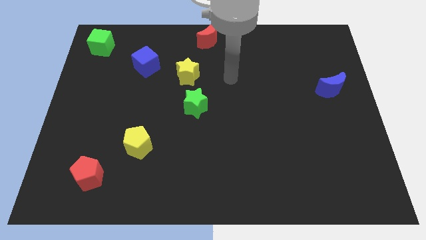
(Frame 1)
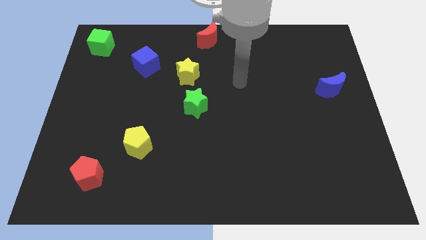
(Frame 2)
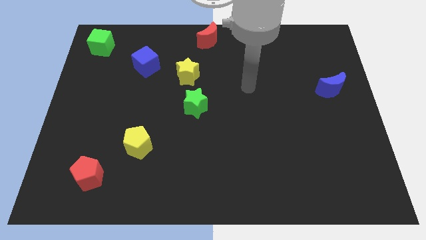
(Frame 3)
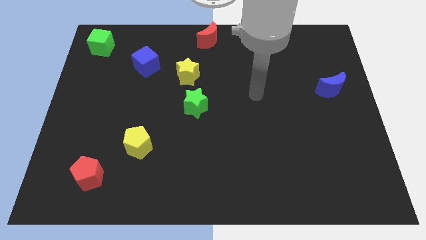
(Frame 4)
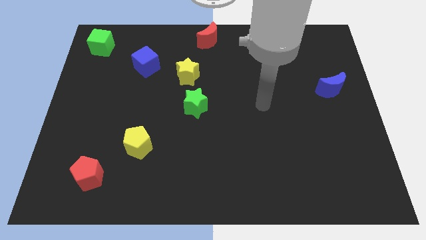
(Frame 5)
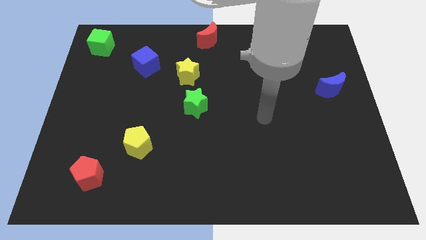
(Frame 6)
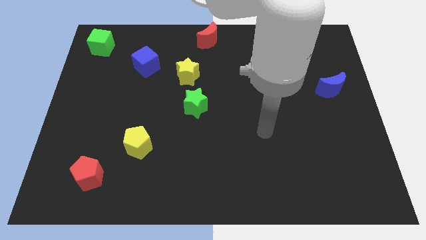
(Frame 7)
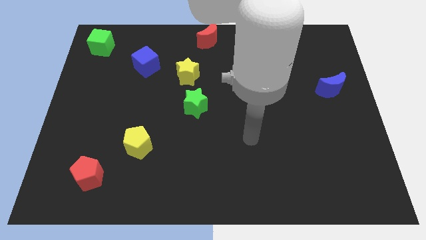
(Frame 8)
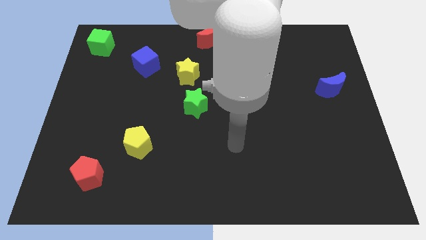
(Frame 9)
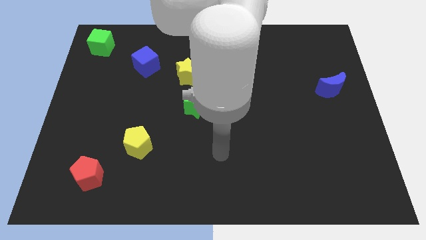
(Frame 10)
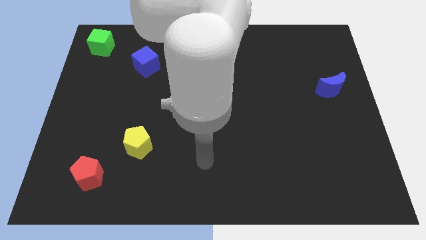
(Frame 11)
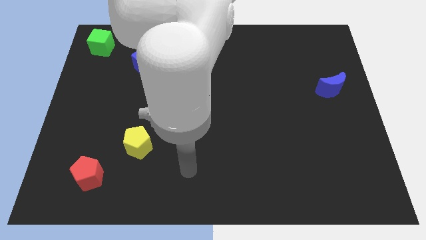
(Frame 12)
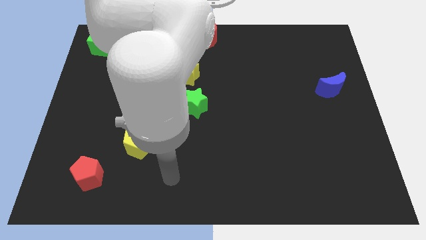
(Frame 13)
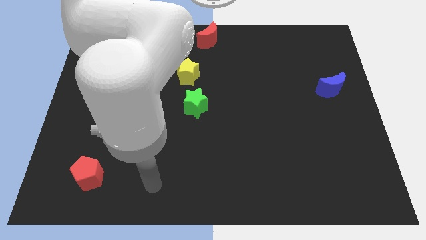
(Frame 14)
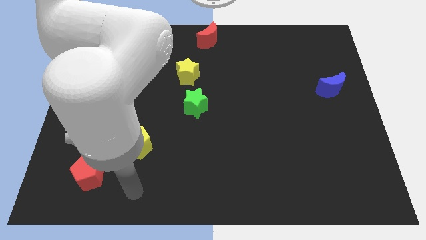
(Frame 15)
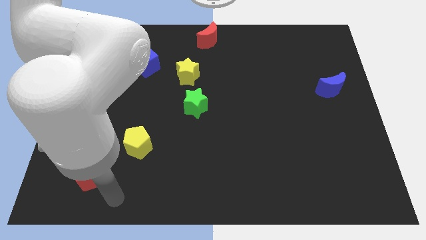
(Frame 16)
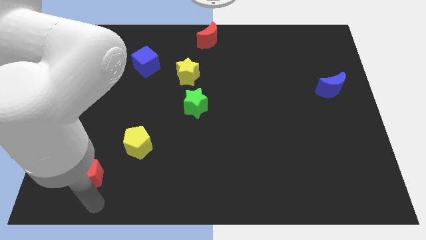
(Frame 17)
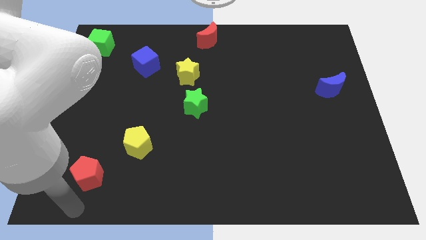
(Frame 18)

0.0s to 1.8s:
point your arm at the bottom of the red pentagon

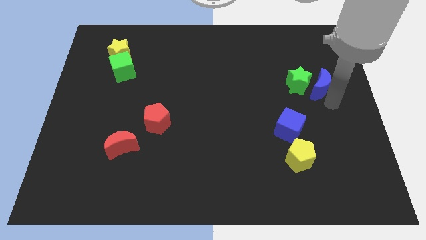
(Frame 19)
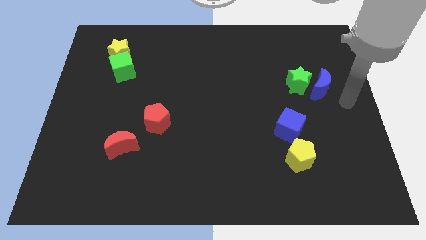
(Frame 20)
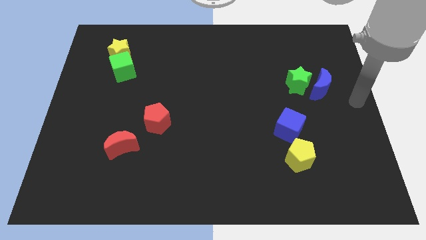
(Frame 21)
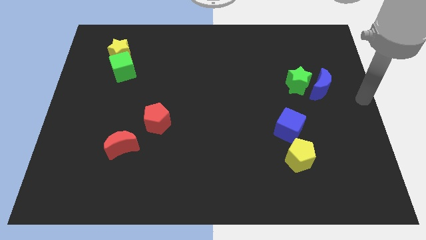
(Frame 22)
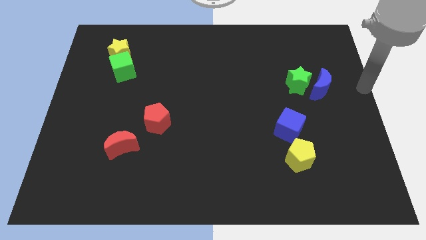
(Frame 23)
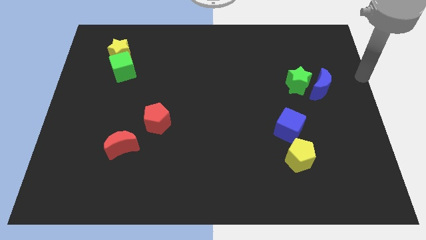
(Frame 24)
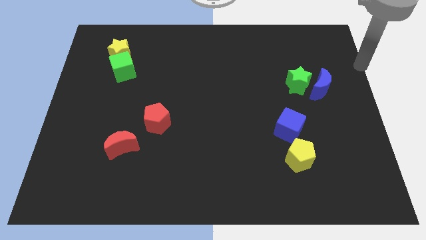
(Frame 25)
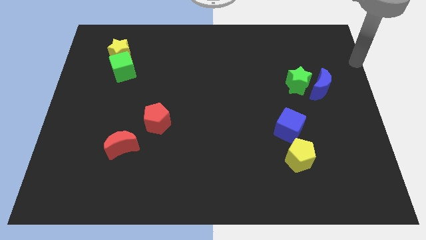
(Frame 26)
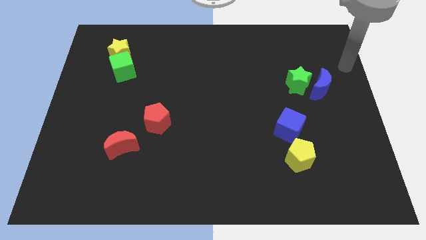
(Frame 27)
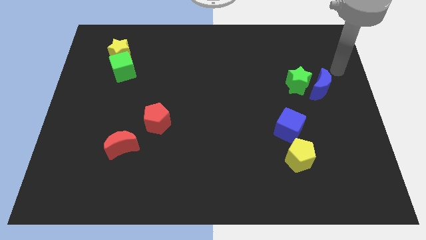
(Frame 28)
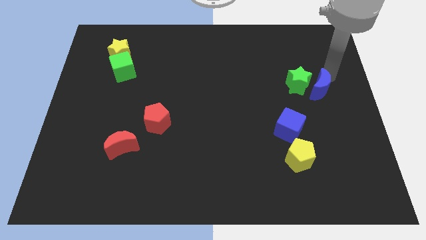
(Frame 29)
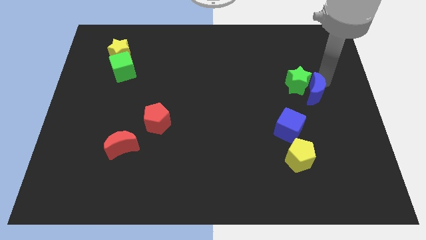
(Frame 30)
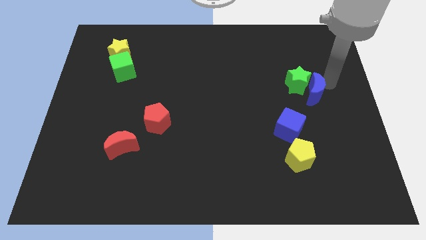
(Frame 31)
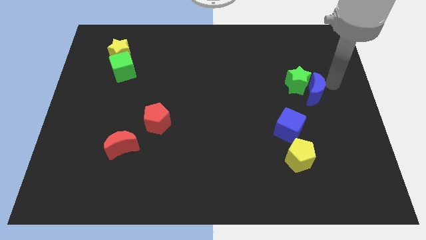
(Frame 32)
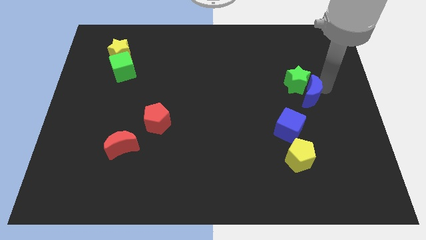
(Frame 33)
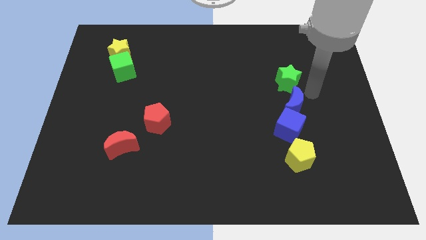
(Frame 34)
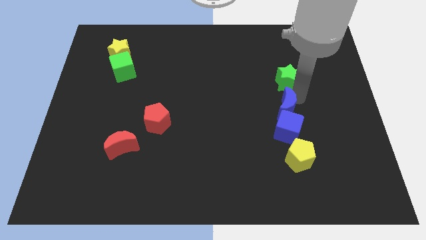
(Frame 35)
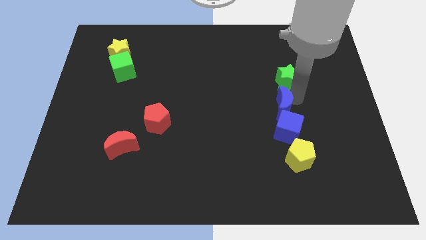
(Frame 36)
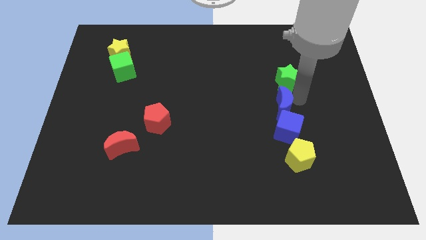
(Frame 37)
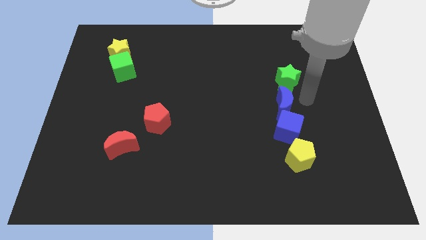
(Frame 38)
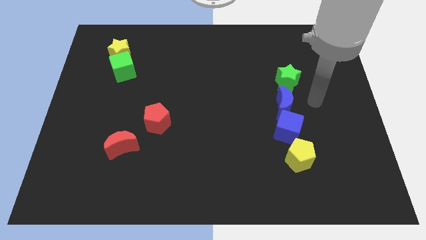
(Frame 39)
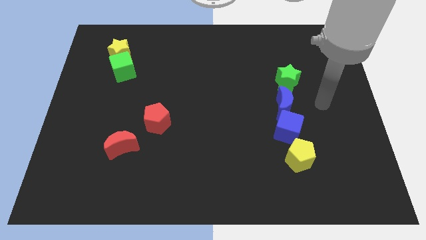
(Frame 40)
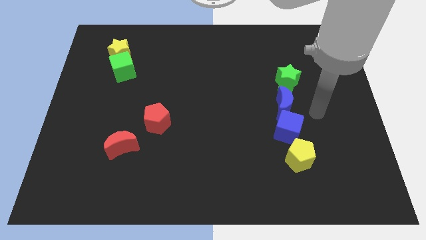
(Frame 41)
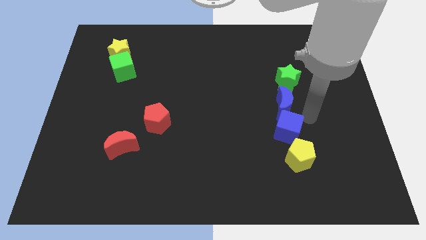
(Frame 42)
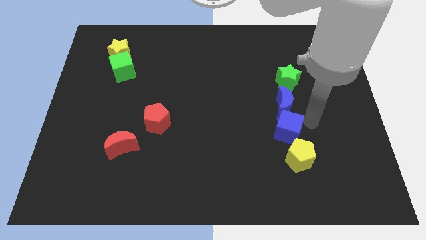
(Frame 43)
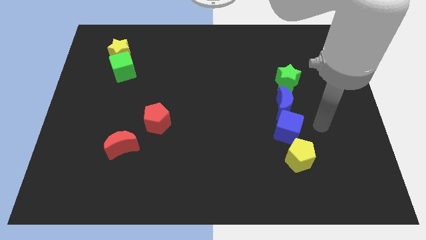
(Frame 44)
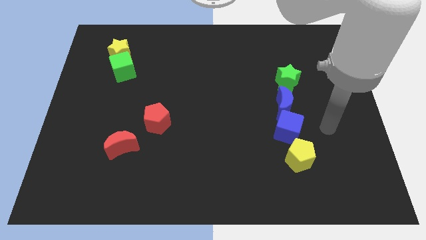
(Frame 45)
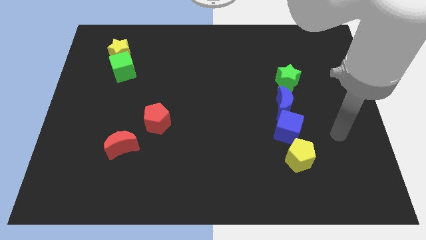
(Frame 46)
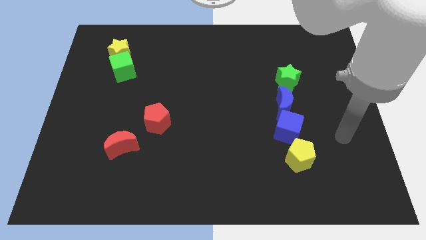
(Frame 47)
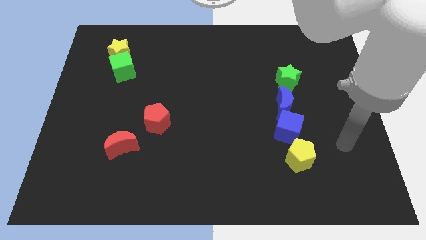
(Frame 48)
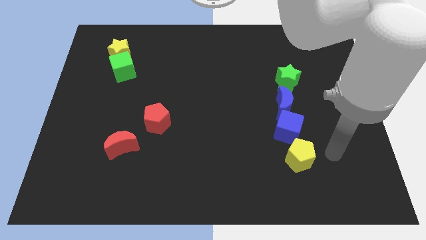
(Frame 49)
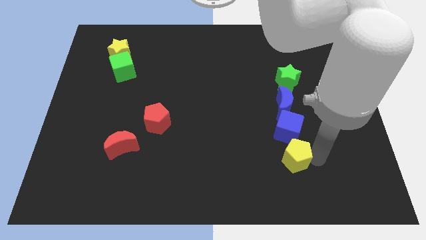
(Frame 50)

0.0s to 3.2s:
push blue crescent between the green star and blue cube

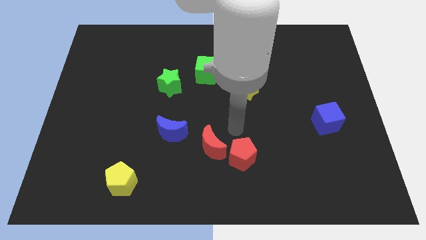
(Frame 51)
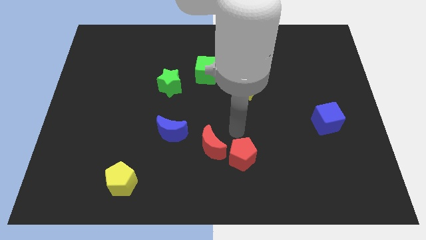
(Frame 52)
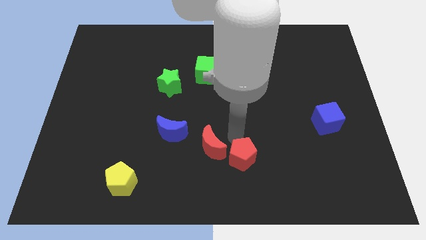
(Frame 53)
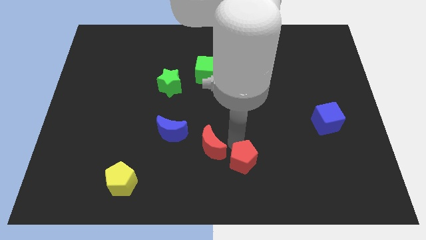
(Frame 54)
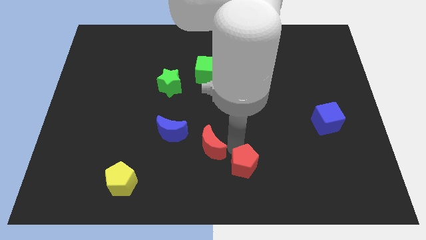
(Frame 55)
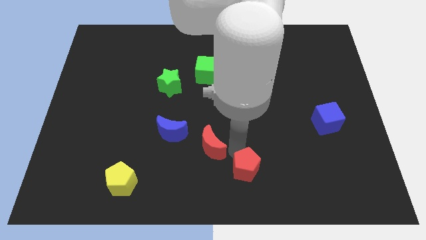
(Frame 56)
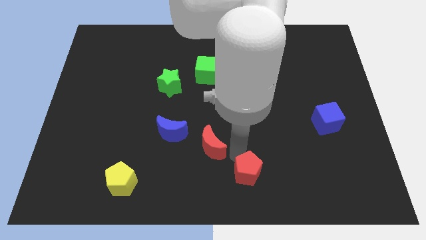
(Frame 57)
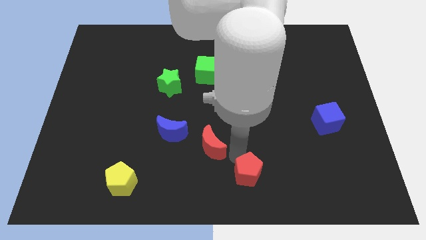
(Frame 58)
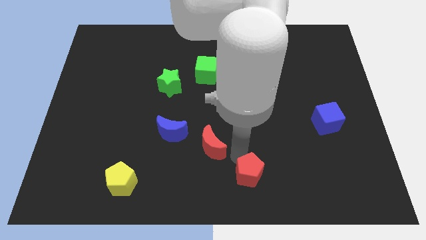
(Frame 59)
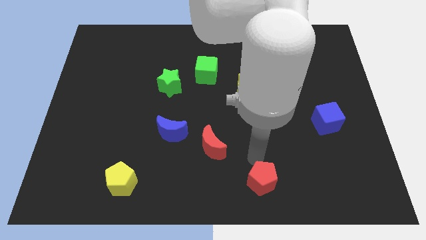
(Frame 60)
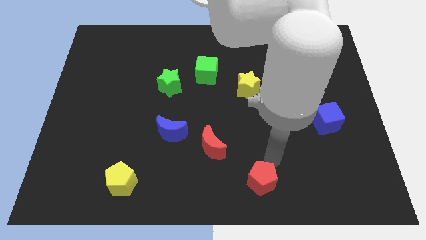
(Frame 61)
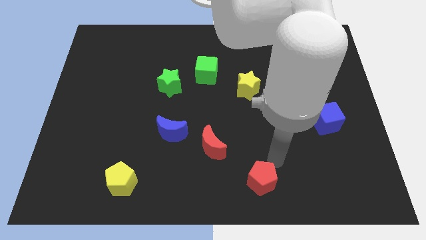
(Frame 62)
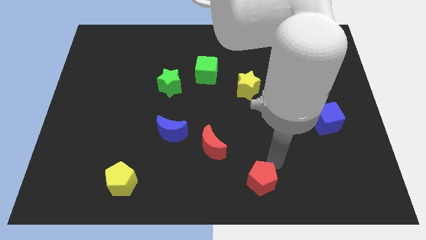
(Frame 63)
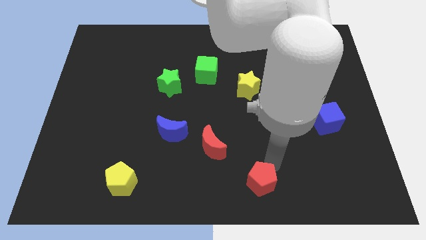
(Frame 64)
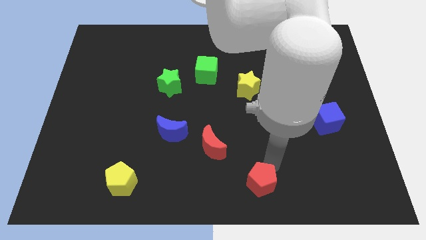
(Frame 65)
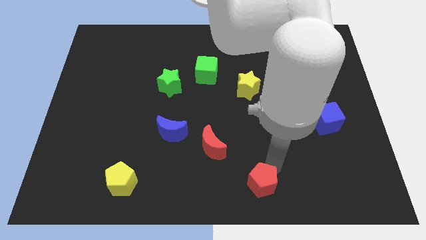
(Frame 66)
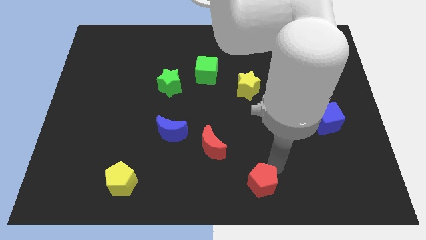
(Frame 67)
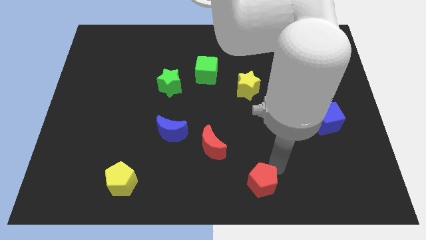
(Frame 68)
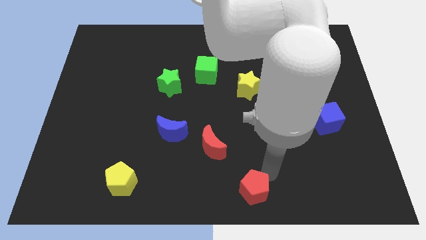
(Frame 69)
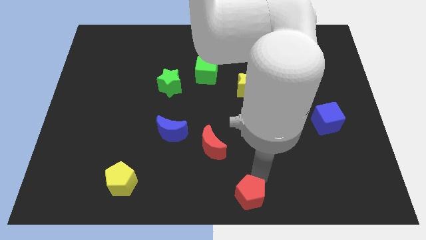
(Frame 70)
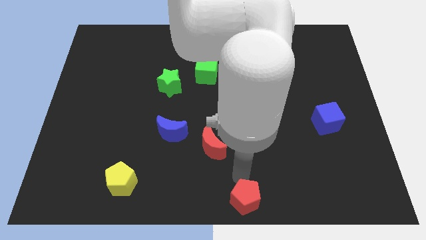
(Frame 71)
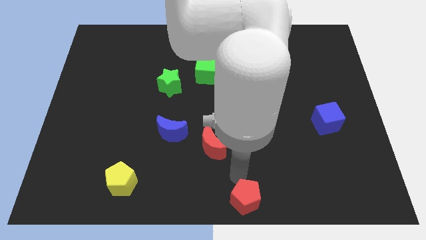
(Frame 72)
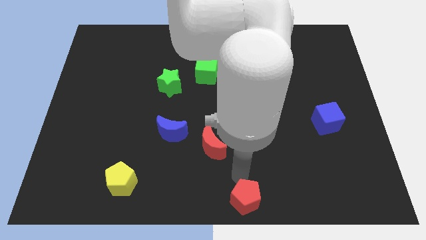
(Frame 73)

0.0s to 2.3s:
place the red pentagon diagonally to blue cube

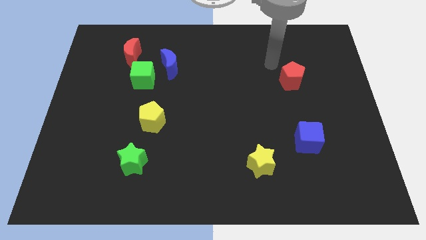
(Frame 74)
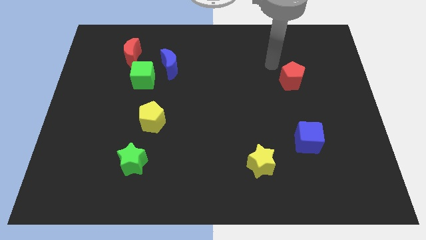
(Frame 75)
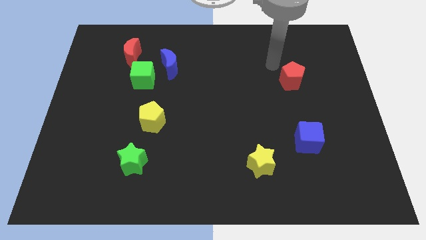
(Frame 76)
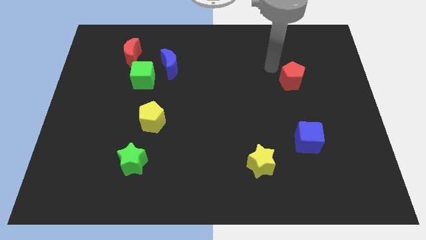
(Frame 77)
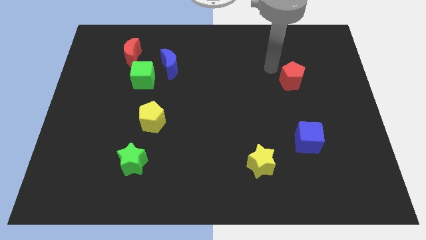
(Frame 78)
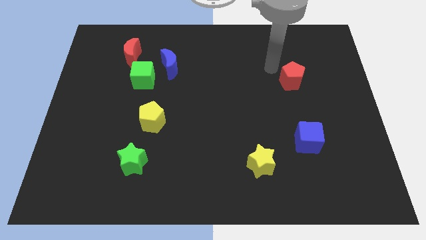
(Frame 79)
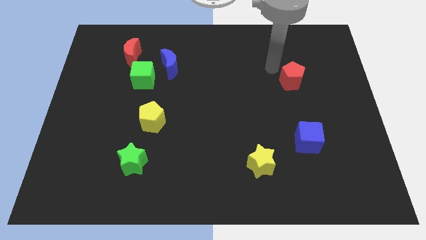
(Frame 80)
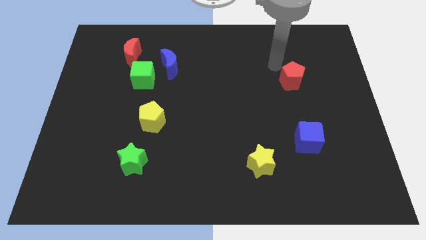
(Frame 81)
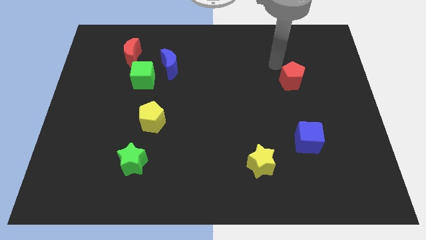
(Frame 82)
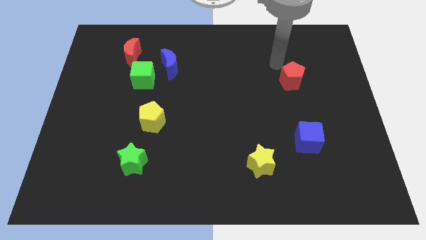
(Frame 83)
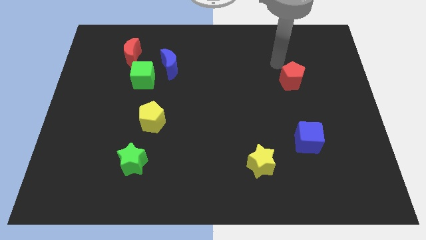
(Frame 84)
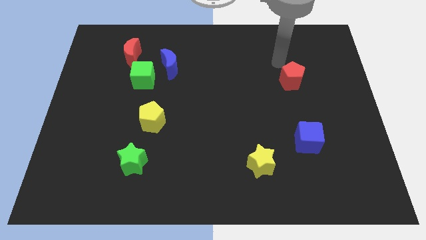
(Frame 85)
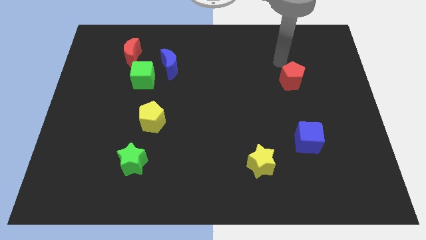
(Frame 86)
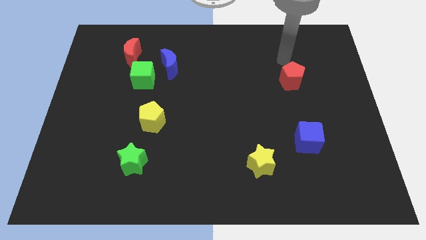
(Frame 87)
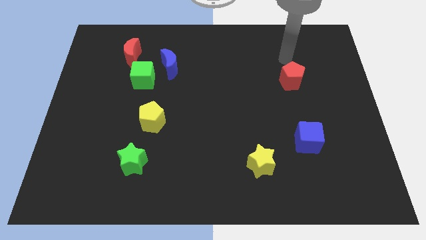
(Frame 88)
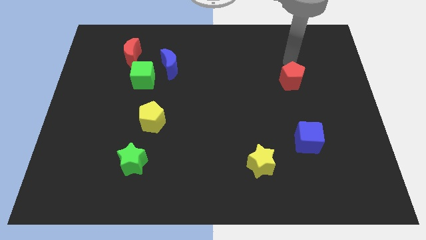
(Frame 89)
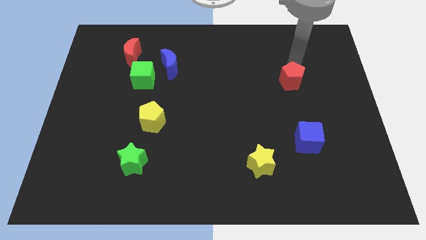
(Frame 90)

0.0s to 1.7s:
place arm on the top of red pentagon
